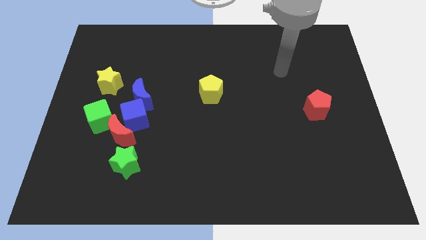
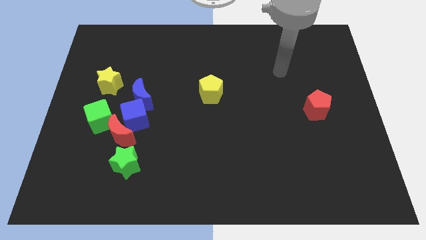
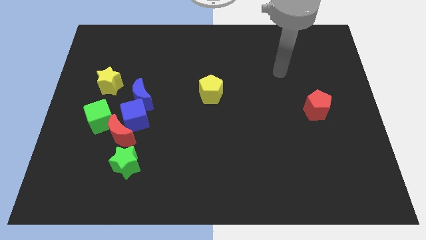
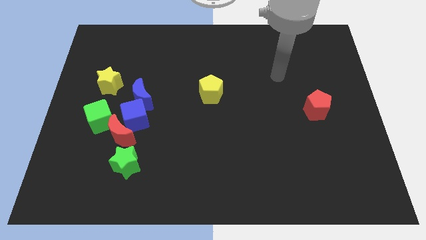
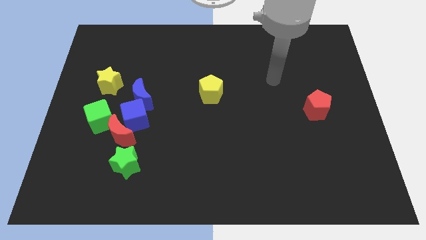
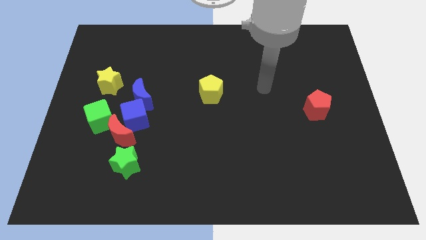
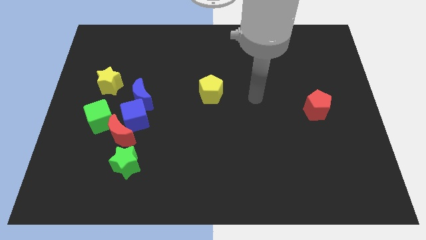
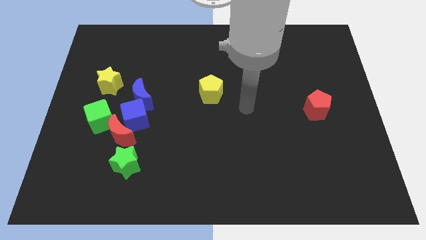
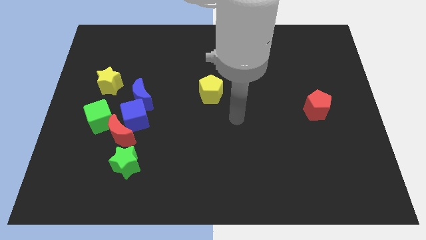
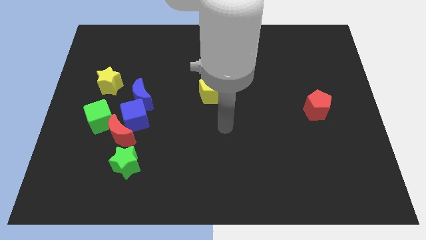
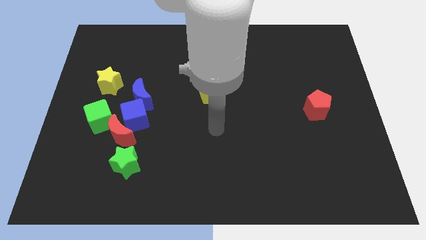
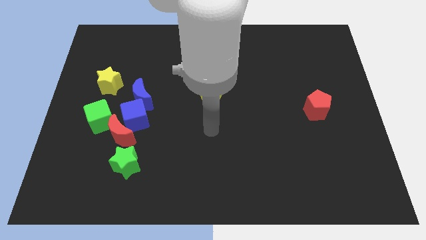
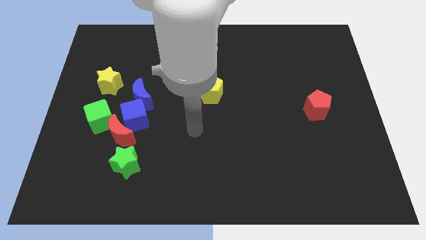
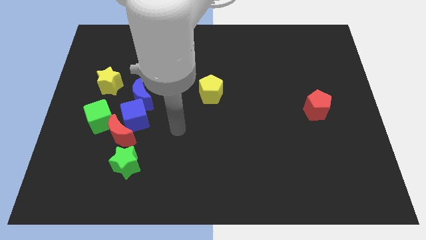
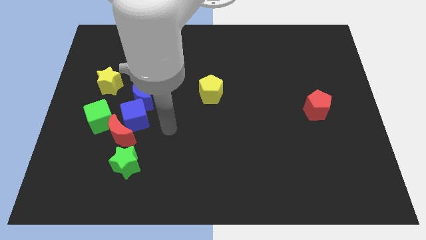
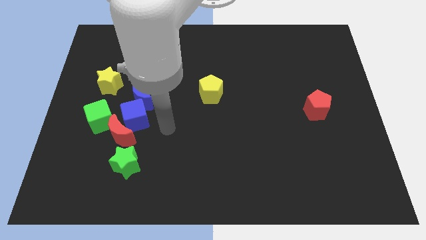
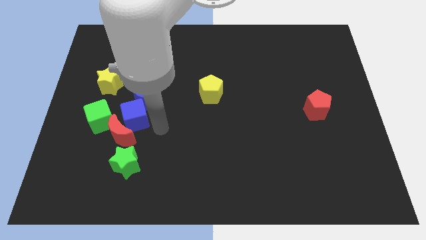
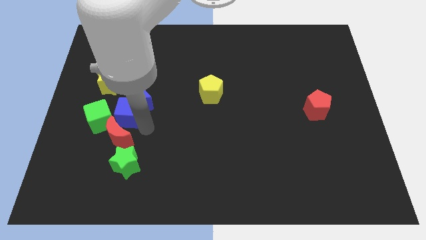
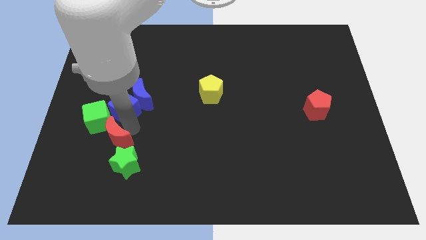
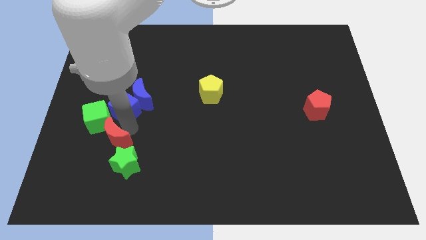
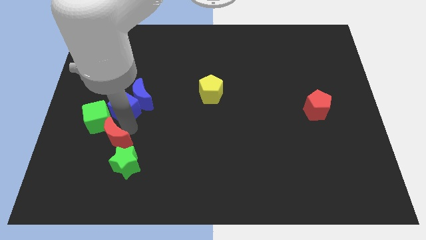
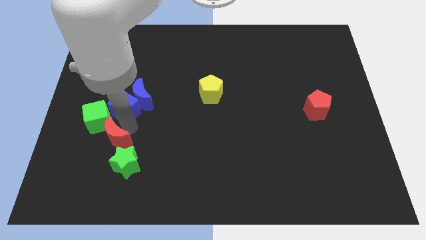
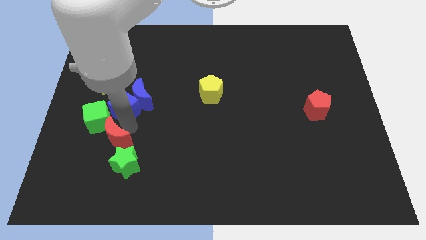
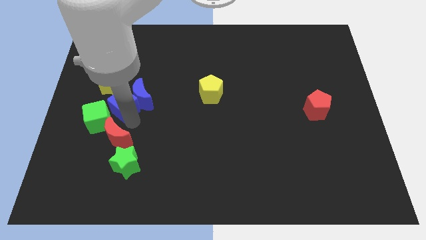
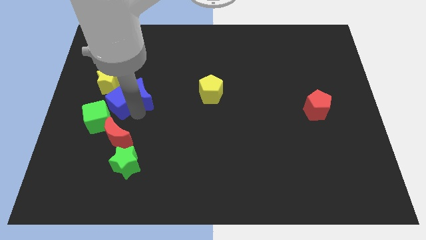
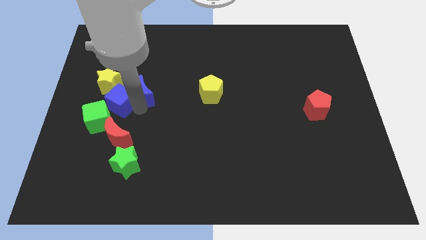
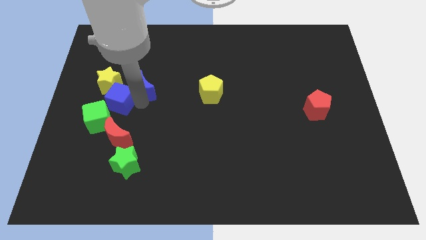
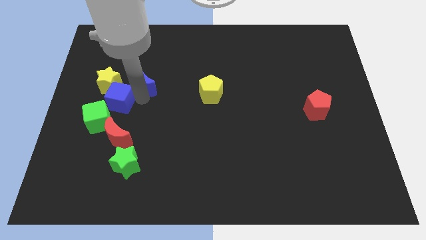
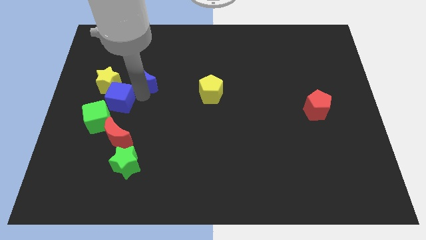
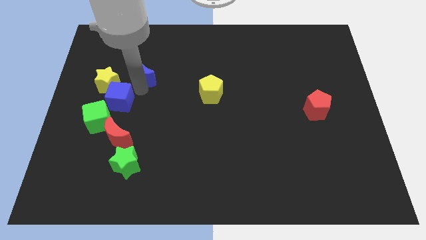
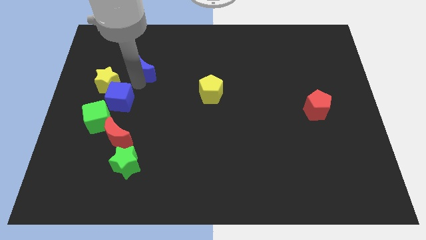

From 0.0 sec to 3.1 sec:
move the blue moon upwards

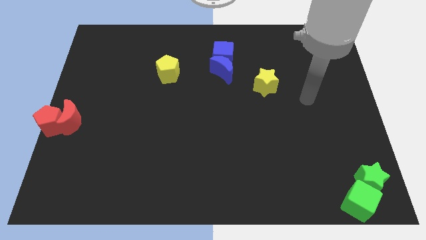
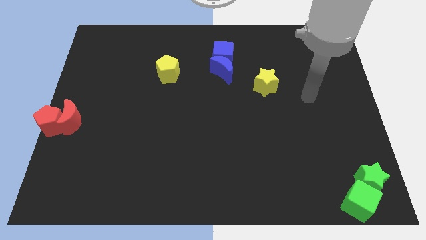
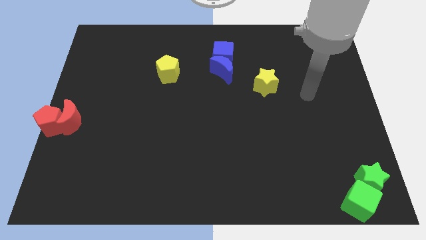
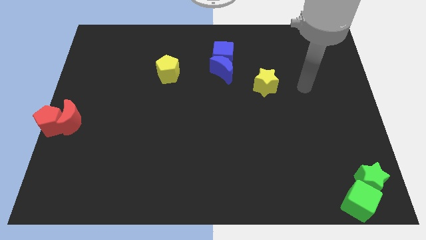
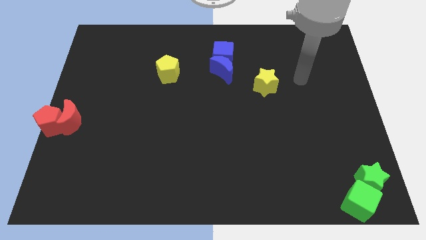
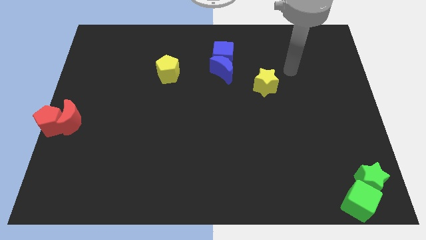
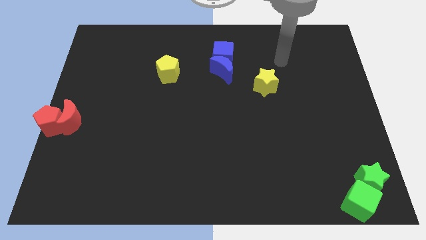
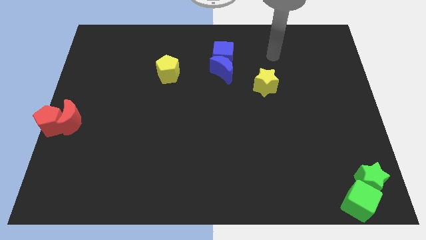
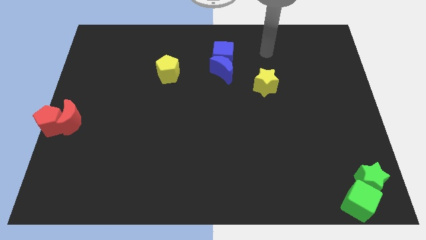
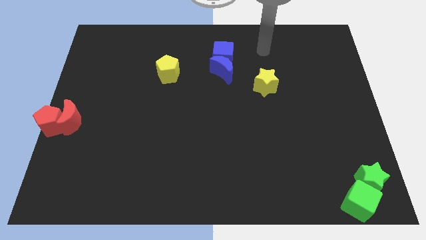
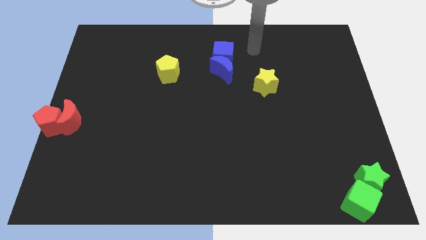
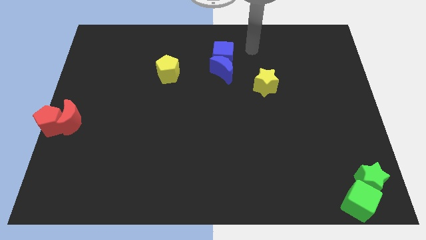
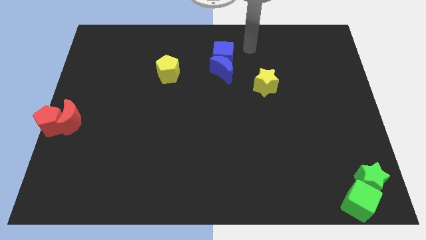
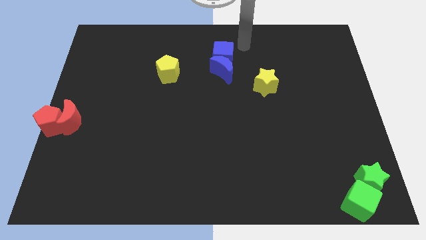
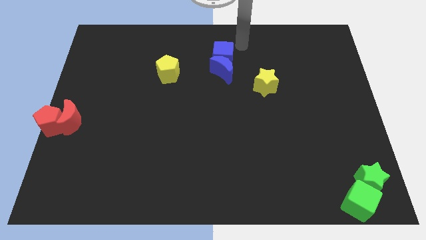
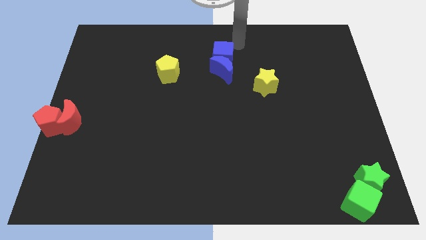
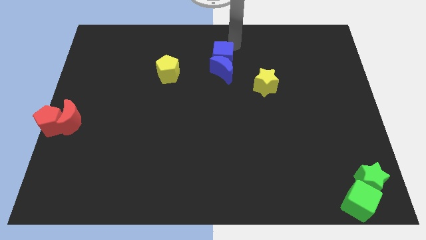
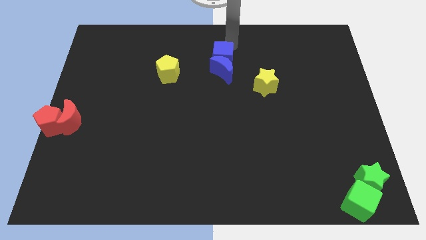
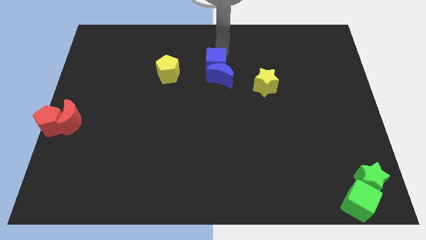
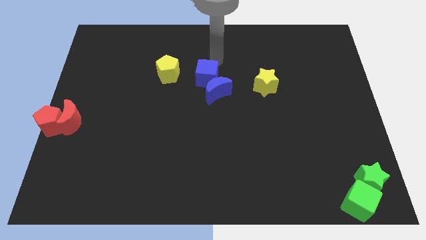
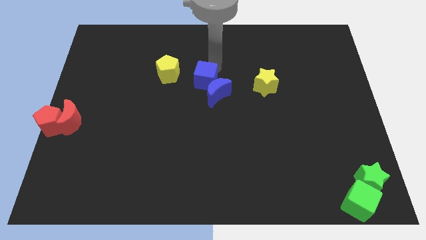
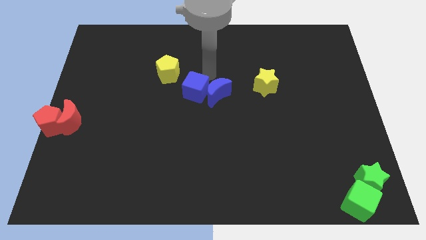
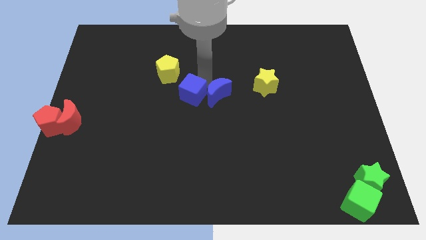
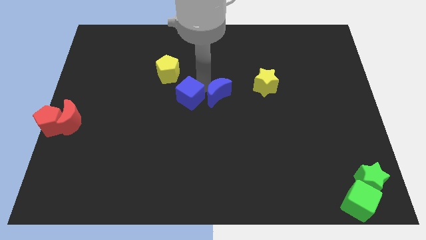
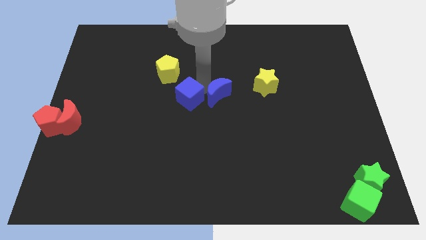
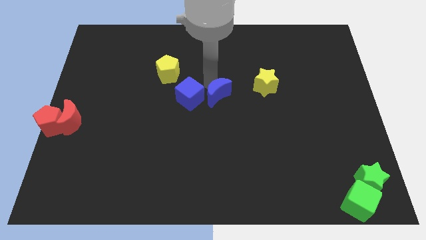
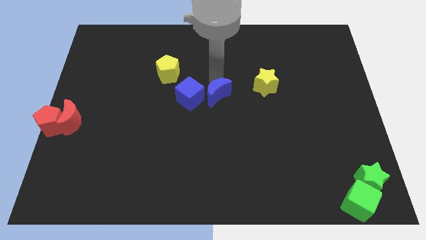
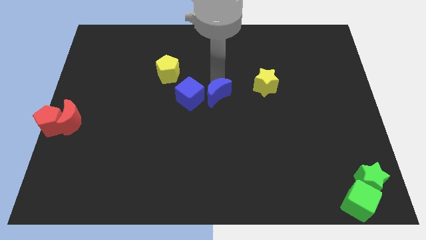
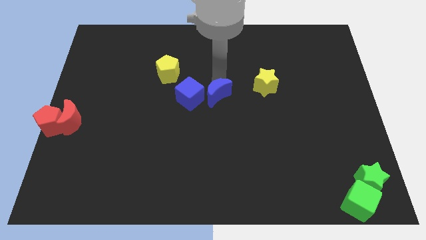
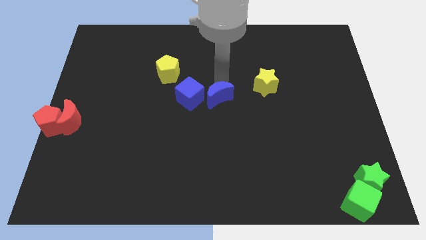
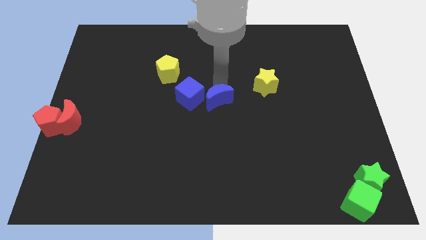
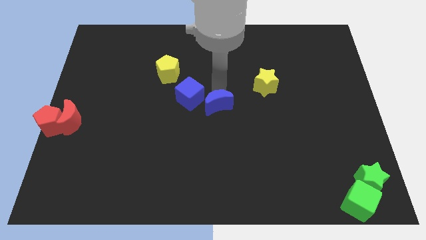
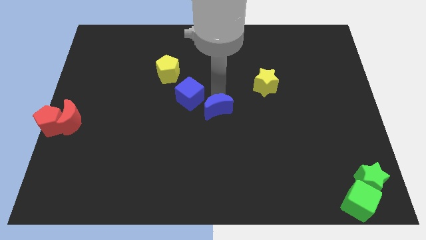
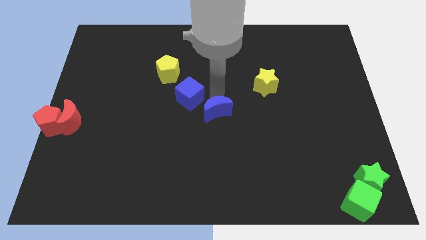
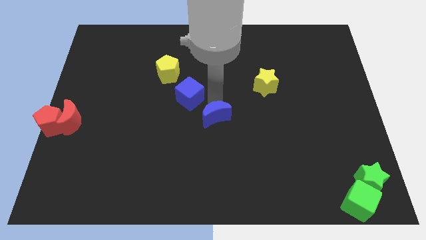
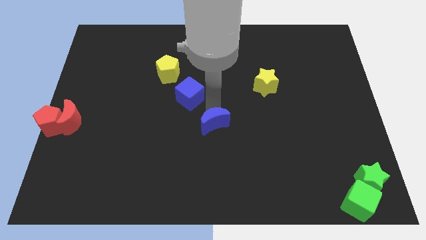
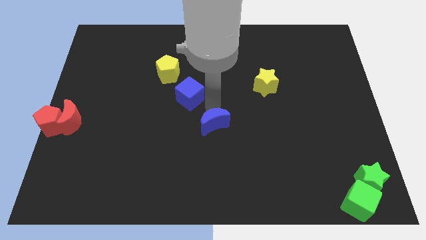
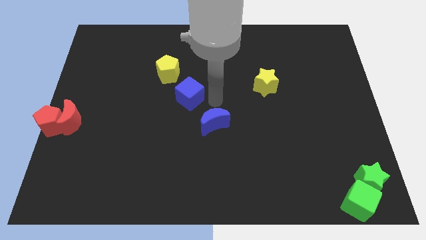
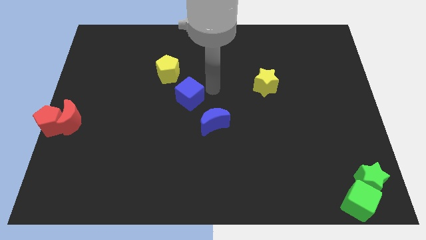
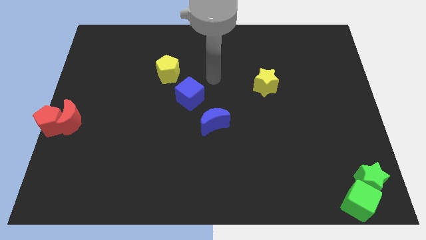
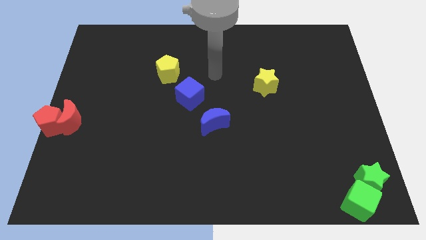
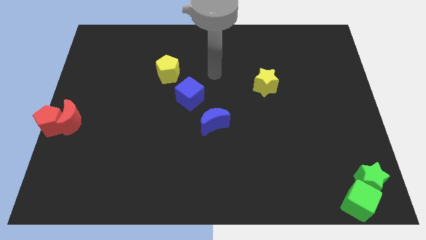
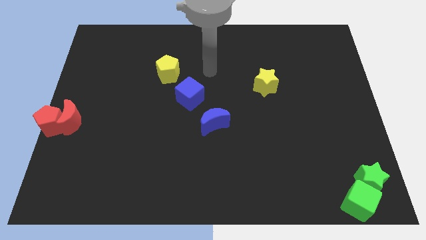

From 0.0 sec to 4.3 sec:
place the blue blocks diagonally at the bottom right side of the yellow pentagon

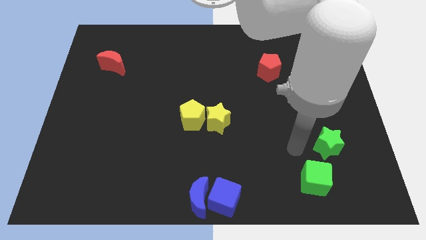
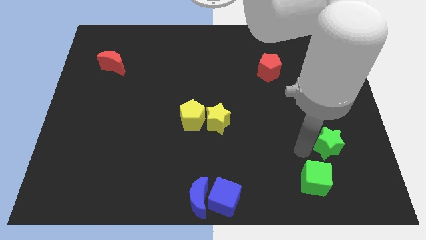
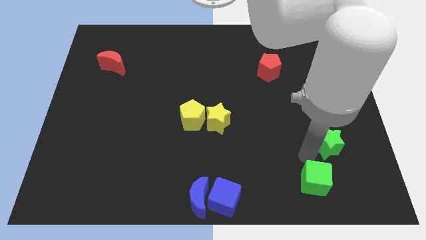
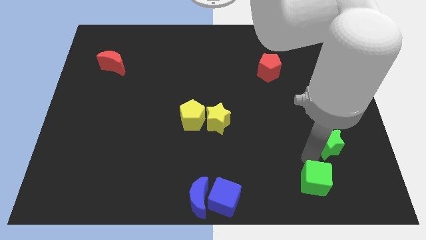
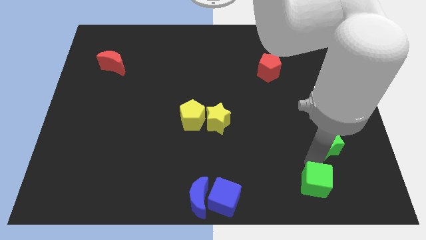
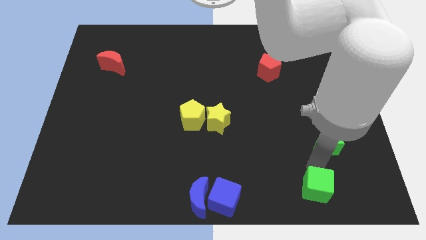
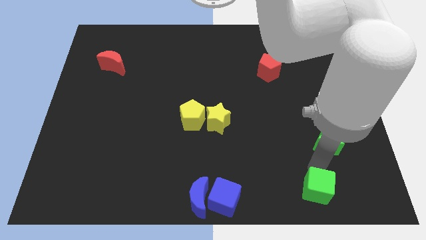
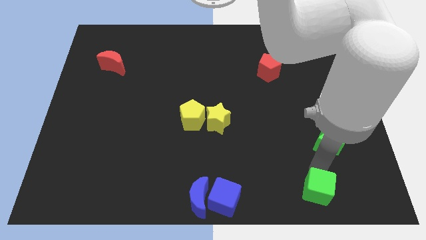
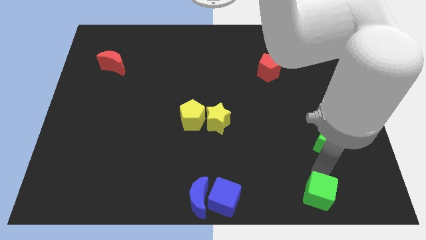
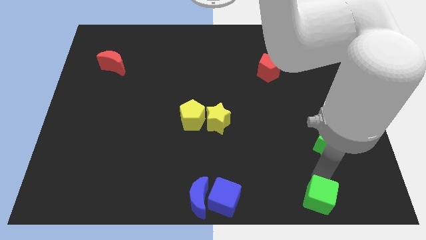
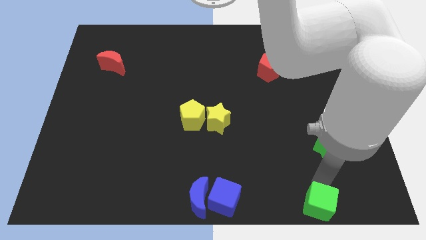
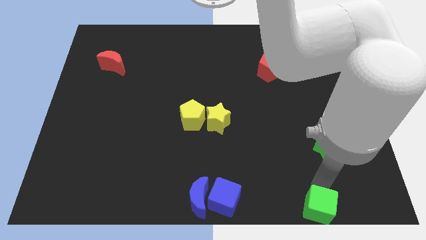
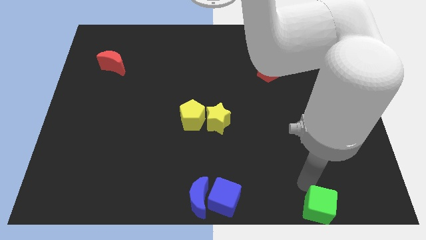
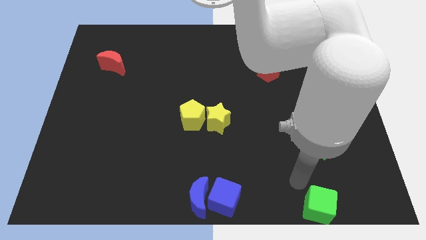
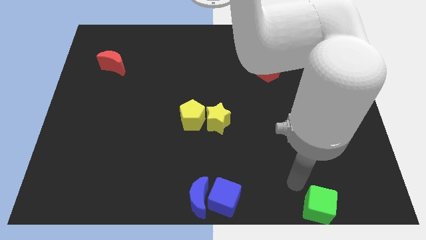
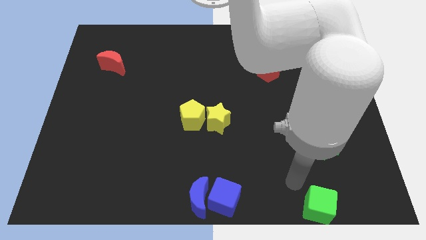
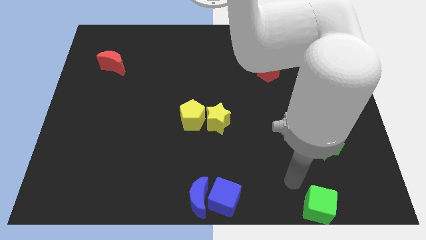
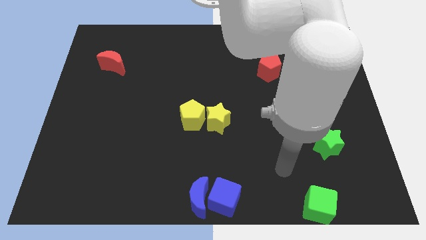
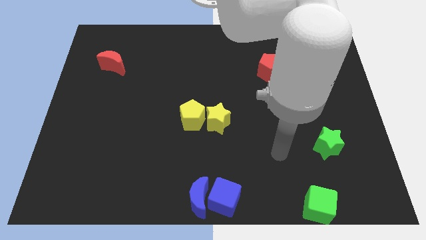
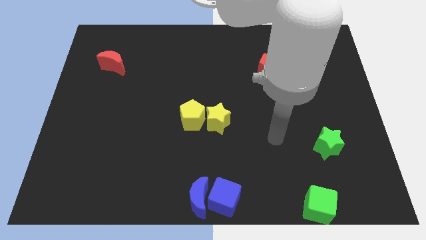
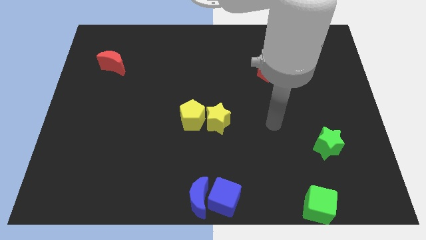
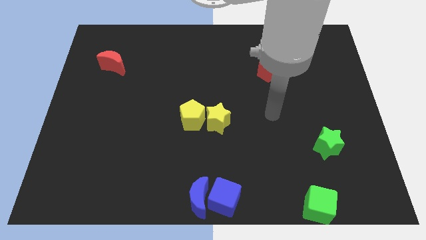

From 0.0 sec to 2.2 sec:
push the green cube to the bottom of the board
